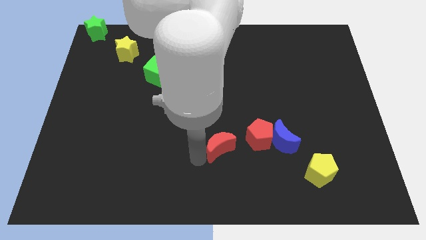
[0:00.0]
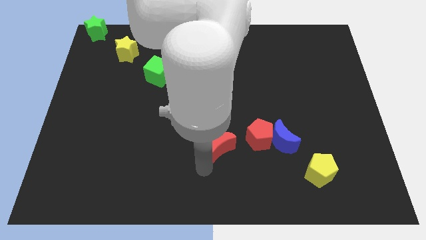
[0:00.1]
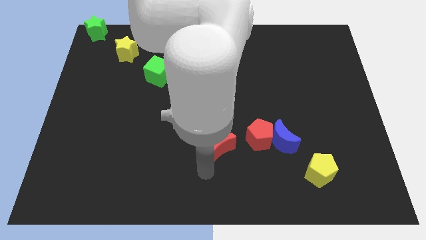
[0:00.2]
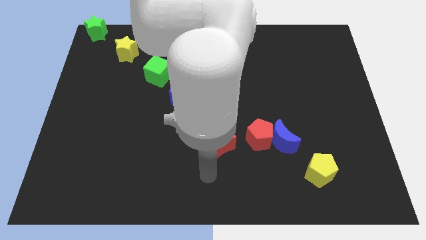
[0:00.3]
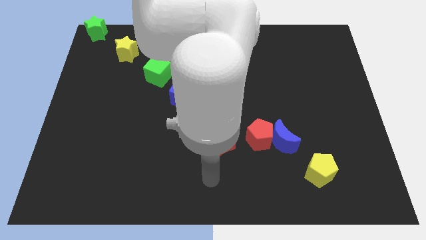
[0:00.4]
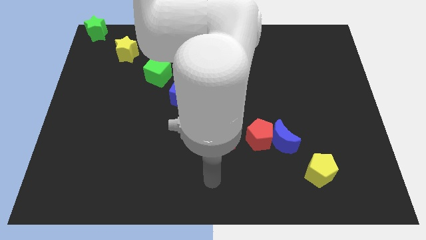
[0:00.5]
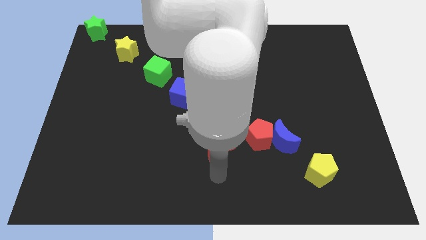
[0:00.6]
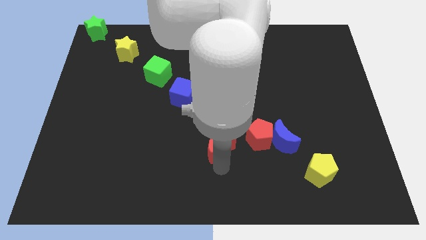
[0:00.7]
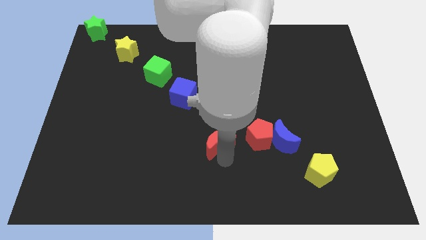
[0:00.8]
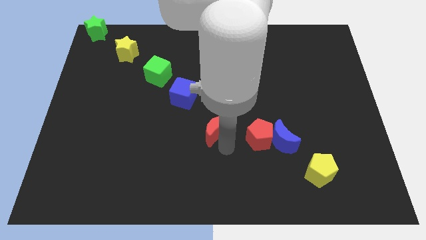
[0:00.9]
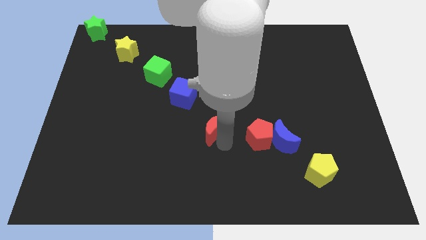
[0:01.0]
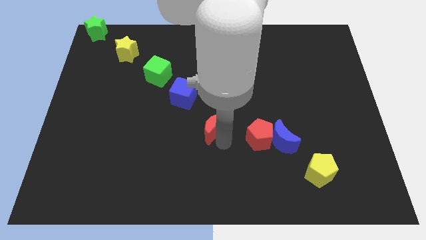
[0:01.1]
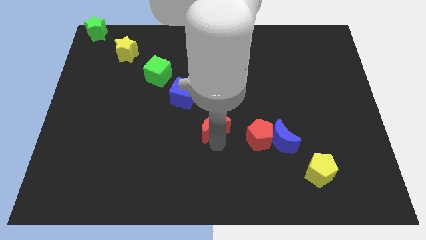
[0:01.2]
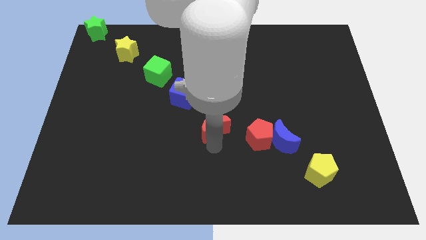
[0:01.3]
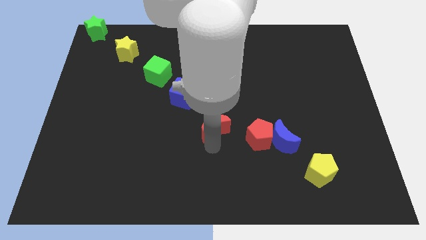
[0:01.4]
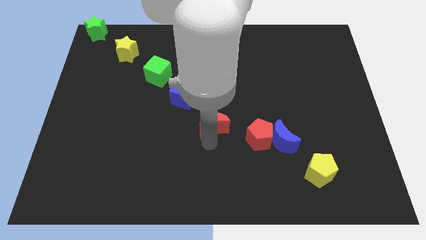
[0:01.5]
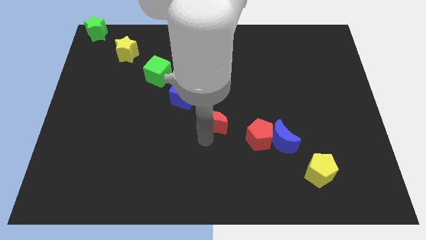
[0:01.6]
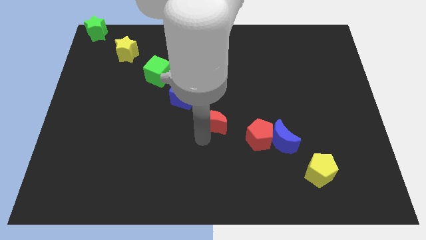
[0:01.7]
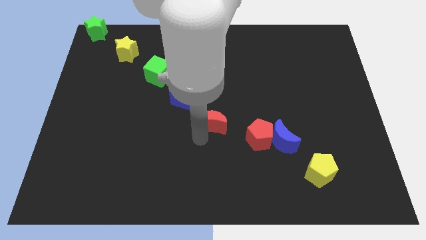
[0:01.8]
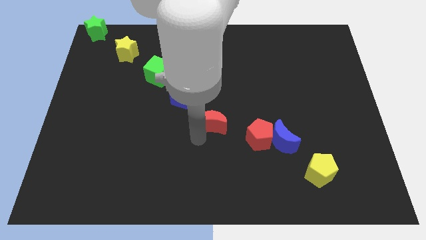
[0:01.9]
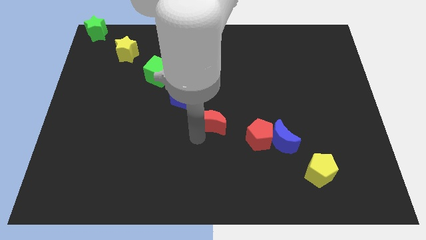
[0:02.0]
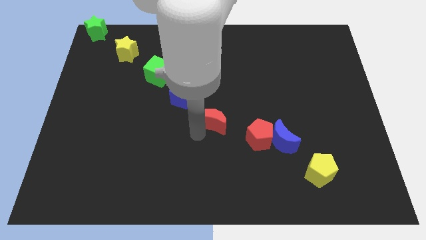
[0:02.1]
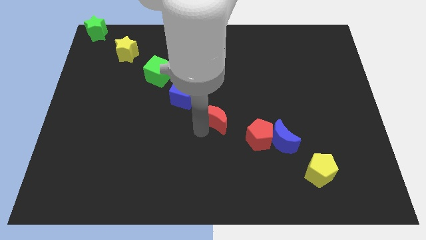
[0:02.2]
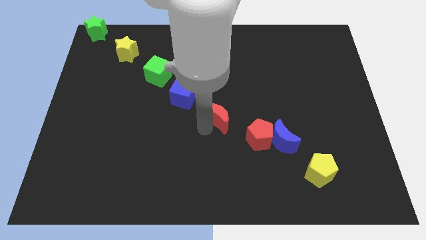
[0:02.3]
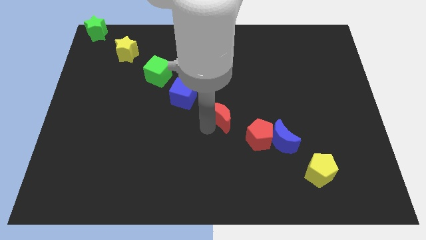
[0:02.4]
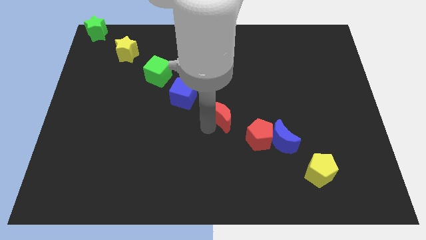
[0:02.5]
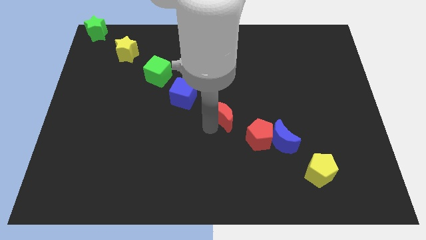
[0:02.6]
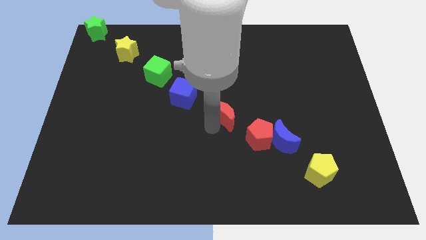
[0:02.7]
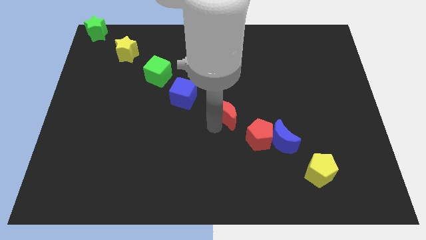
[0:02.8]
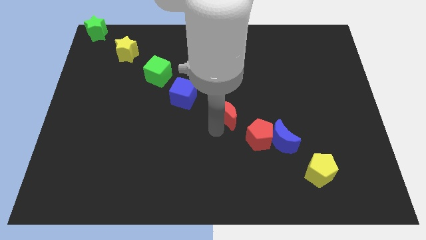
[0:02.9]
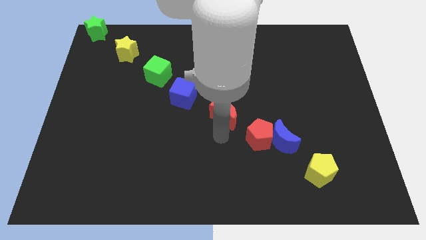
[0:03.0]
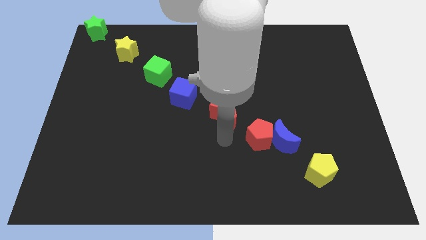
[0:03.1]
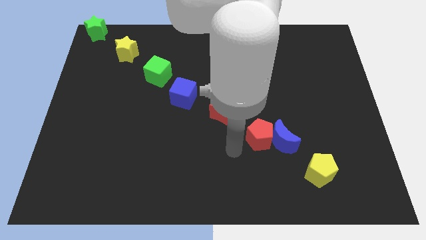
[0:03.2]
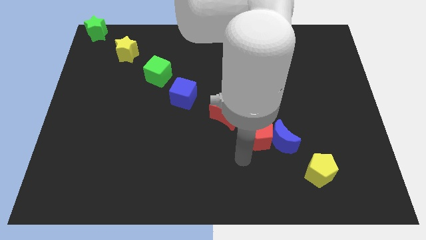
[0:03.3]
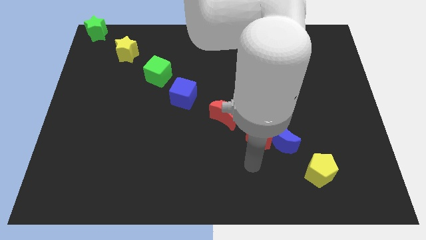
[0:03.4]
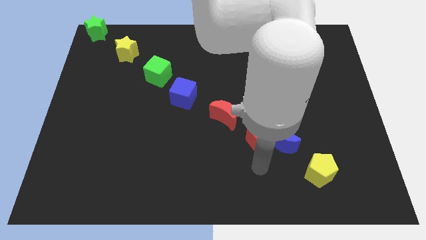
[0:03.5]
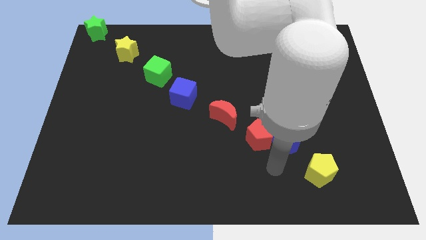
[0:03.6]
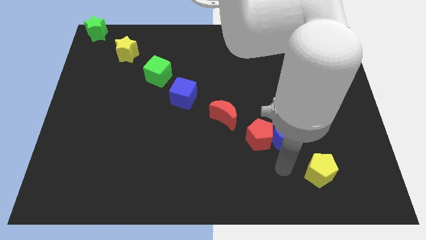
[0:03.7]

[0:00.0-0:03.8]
drag the red crescent diagonal to red pentagon

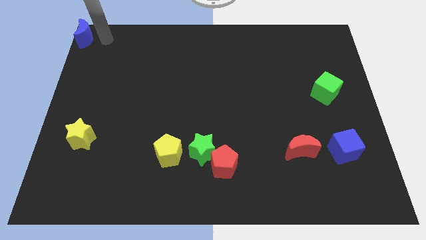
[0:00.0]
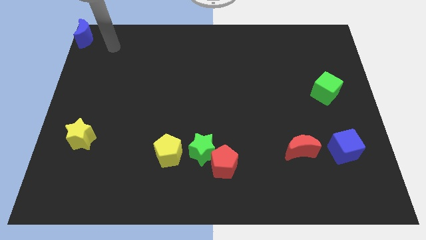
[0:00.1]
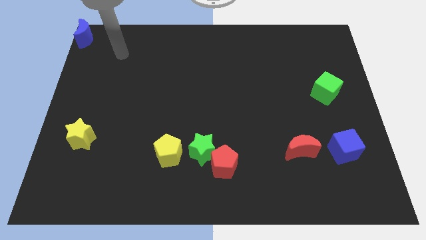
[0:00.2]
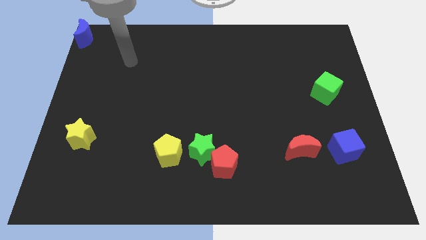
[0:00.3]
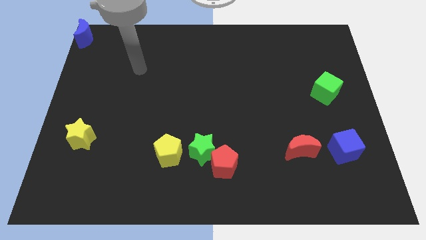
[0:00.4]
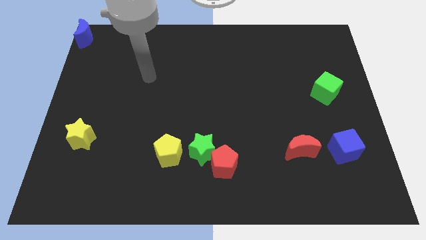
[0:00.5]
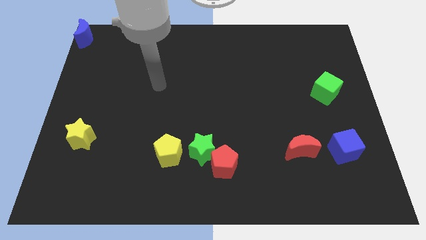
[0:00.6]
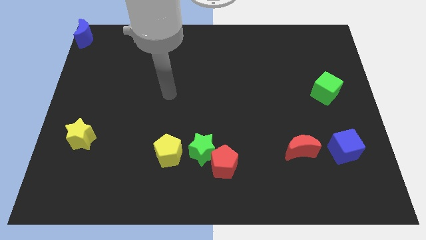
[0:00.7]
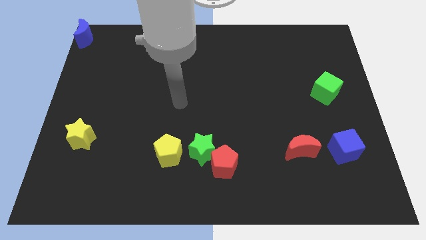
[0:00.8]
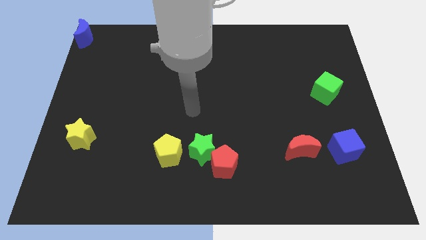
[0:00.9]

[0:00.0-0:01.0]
move your arm away from the blue moon

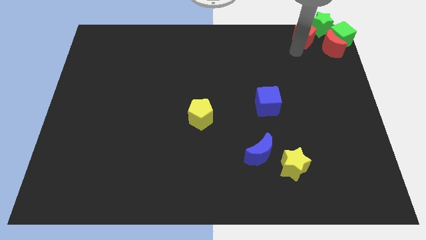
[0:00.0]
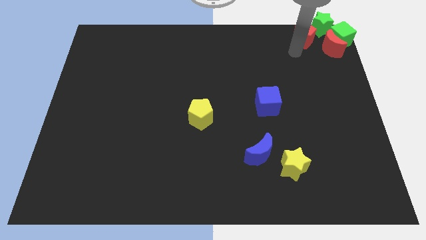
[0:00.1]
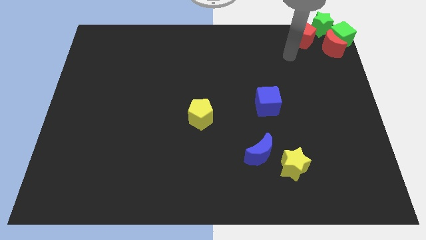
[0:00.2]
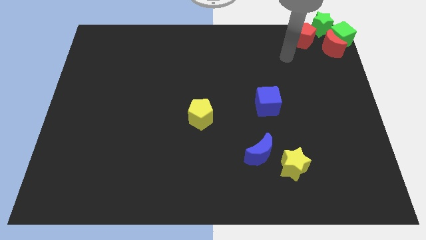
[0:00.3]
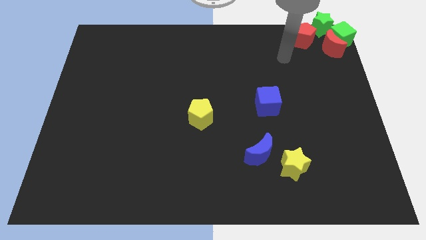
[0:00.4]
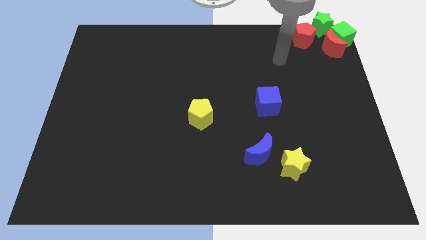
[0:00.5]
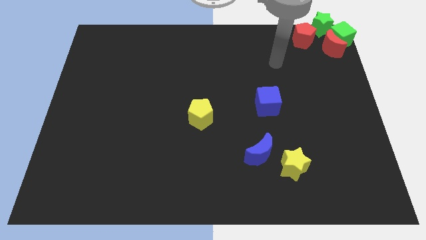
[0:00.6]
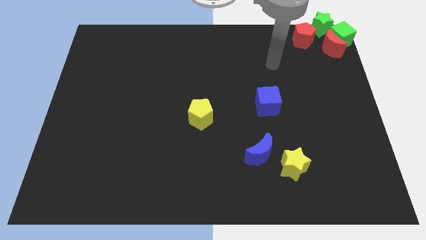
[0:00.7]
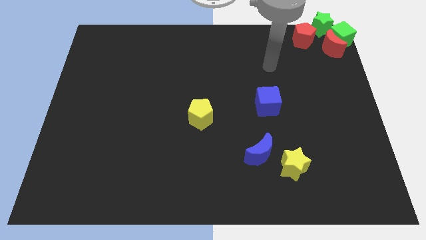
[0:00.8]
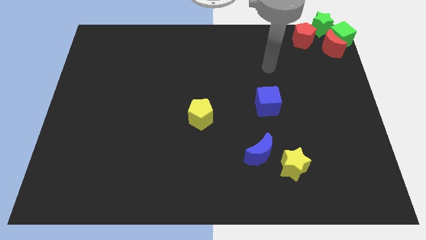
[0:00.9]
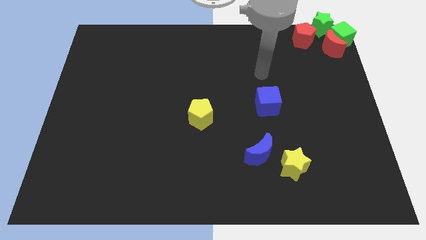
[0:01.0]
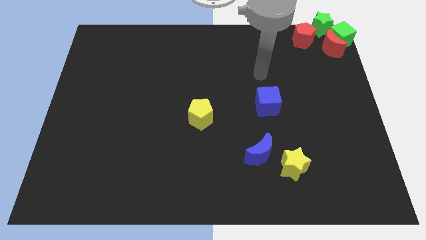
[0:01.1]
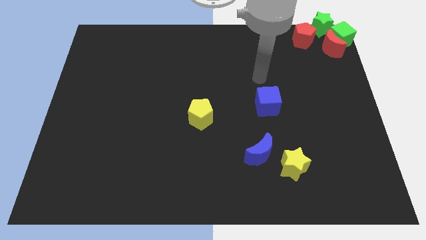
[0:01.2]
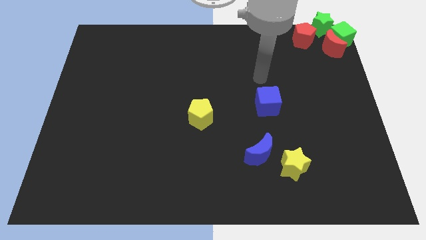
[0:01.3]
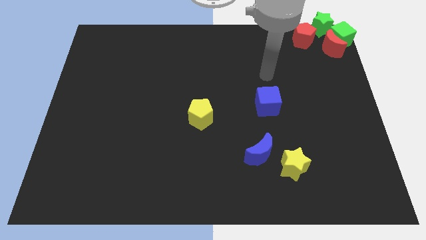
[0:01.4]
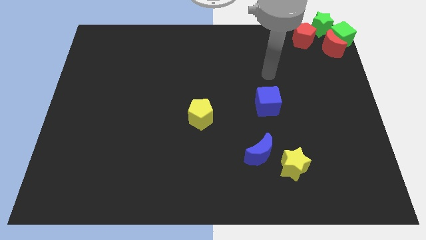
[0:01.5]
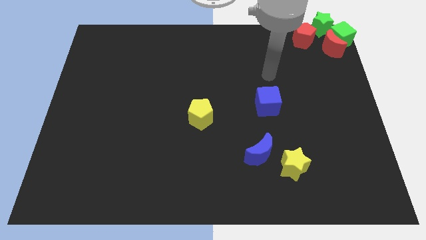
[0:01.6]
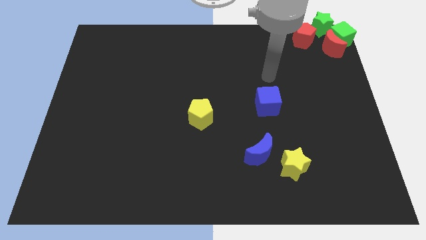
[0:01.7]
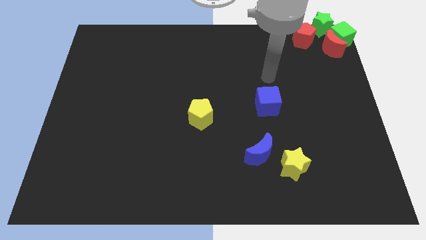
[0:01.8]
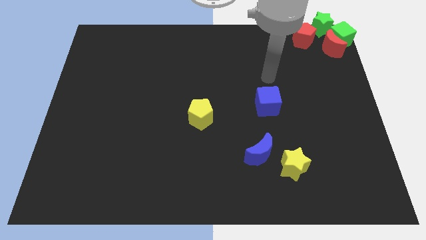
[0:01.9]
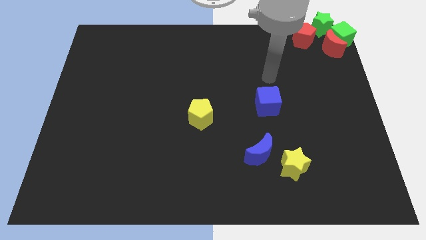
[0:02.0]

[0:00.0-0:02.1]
move arm away from the red pentagon

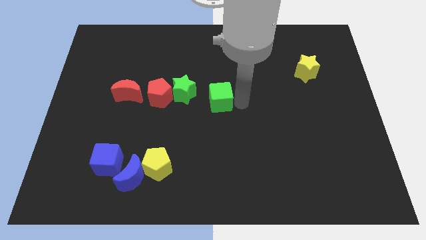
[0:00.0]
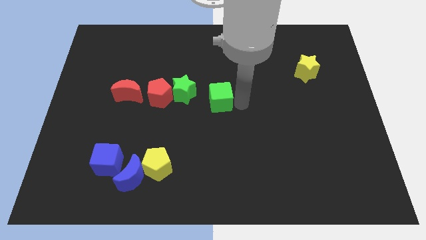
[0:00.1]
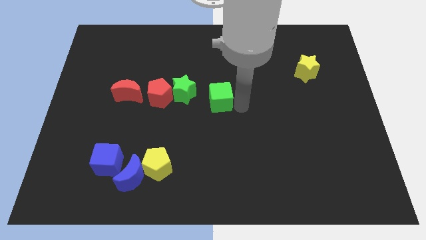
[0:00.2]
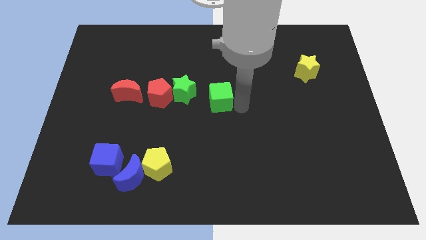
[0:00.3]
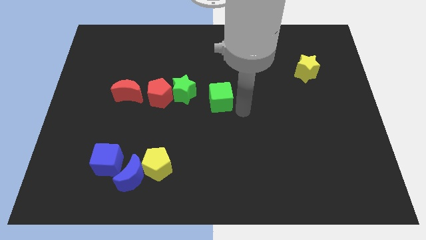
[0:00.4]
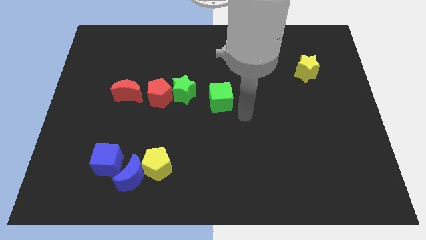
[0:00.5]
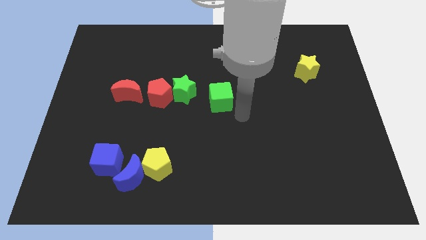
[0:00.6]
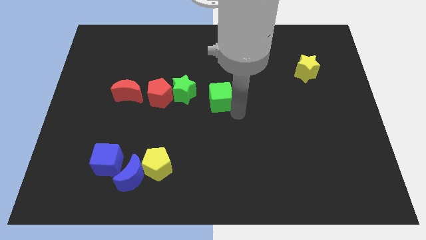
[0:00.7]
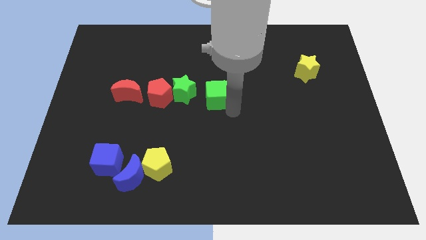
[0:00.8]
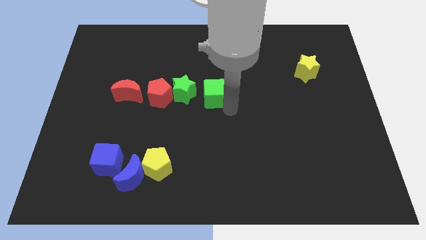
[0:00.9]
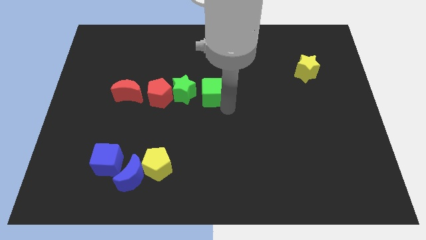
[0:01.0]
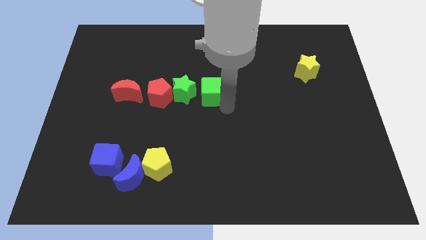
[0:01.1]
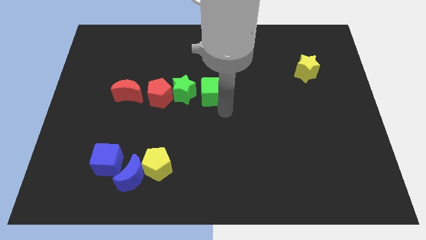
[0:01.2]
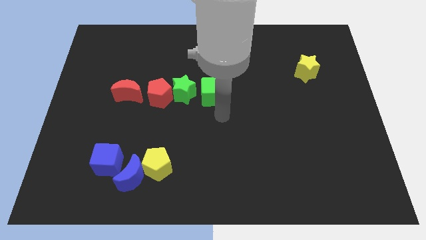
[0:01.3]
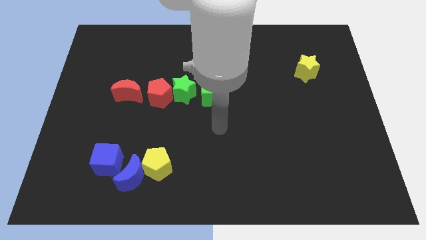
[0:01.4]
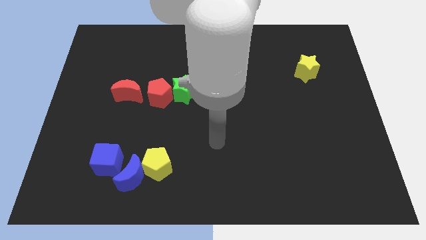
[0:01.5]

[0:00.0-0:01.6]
push the green cube to the right of green star

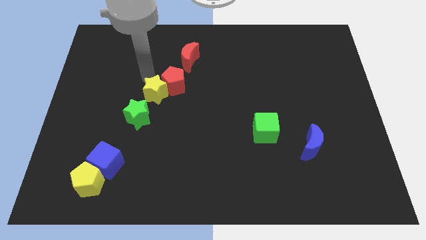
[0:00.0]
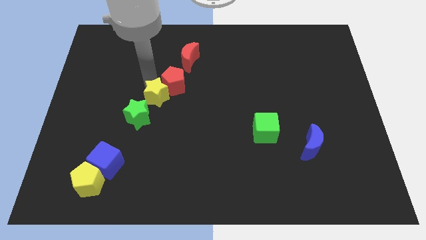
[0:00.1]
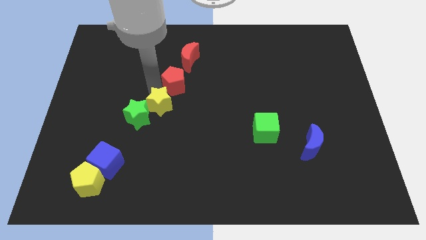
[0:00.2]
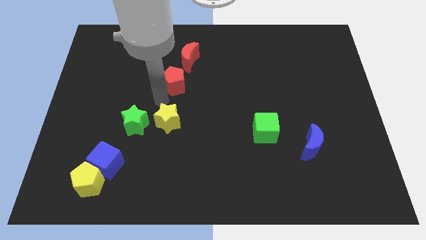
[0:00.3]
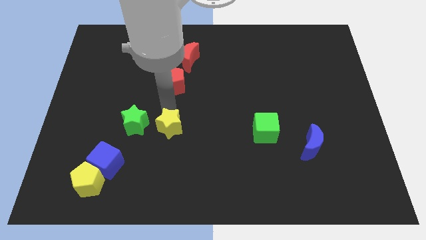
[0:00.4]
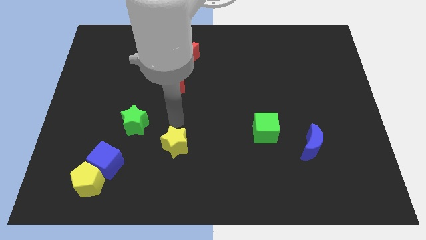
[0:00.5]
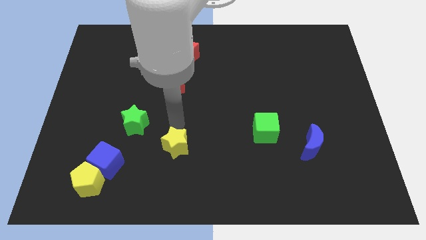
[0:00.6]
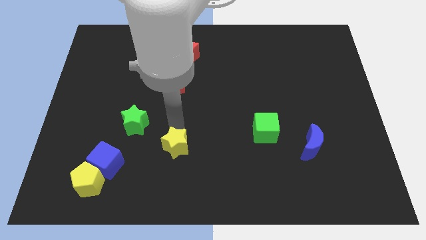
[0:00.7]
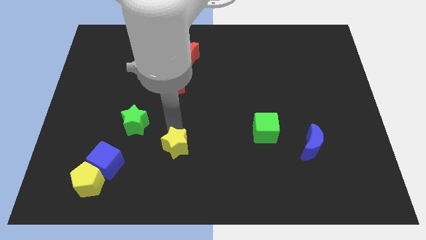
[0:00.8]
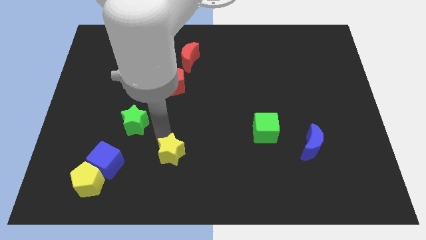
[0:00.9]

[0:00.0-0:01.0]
separate yellow star from green star
